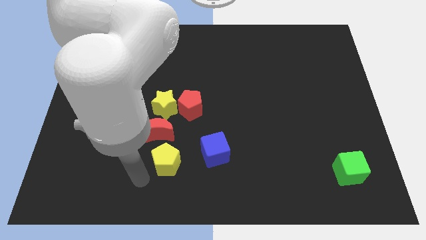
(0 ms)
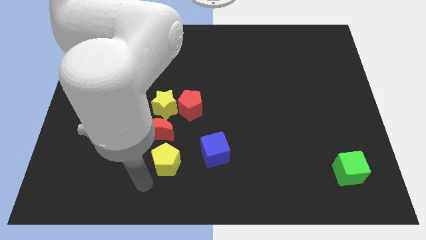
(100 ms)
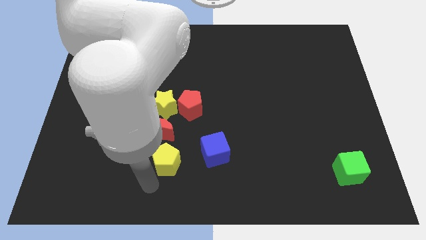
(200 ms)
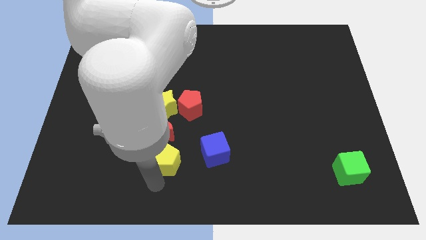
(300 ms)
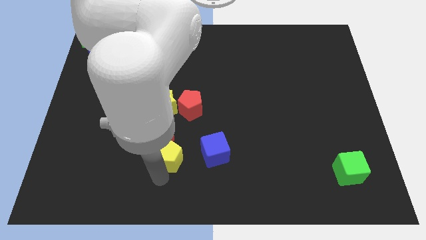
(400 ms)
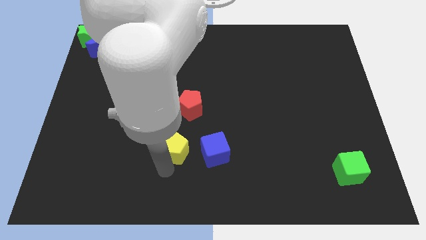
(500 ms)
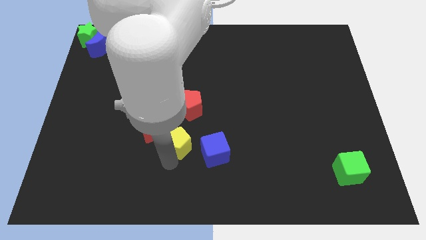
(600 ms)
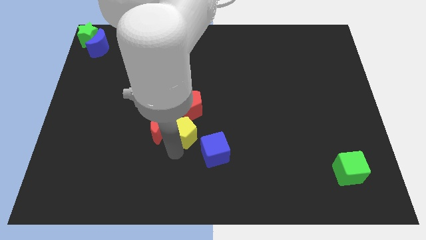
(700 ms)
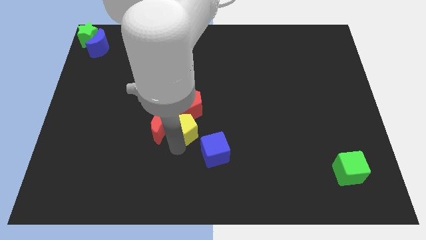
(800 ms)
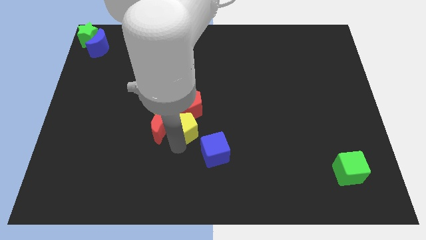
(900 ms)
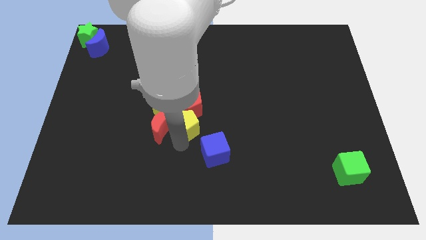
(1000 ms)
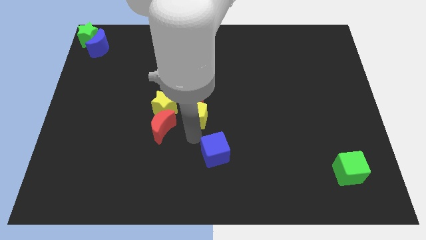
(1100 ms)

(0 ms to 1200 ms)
push the yellow pentagon to the bottom of the red pentagon

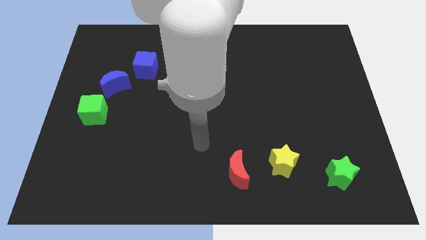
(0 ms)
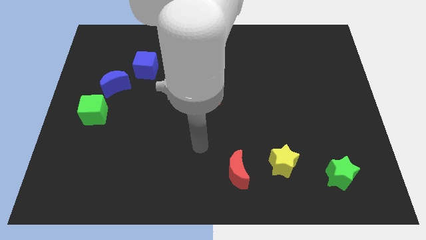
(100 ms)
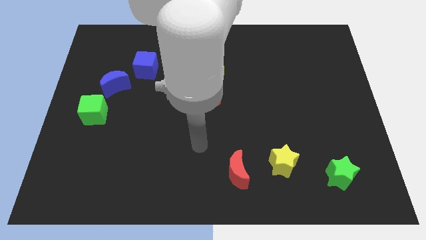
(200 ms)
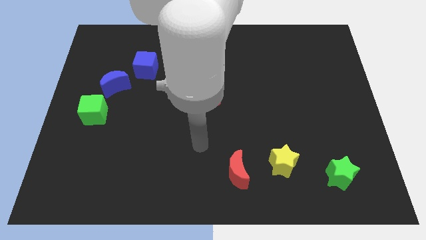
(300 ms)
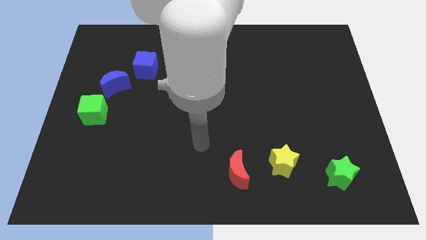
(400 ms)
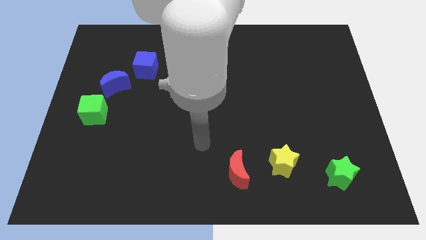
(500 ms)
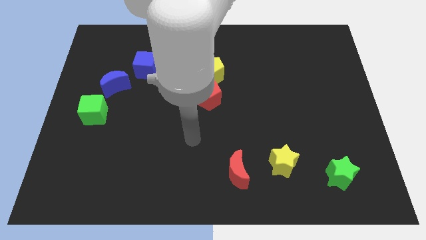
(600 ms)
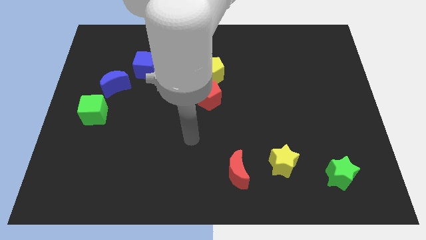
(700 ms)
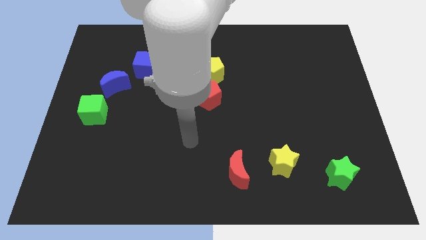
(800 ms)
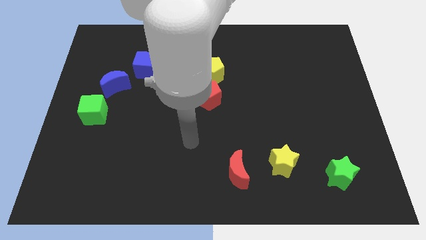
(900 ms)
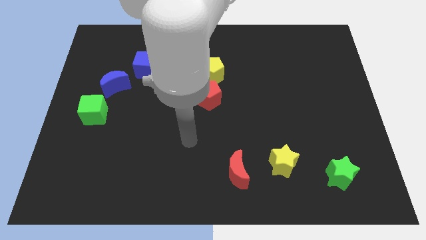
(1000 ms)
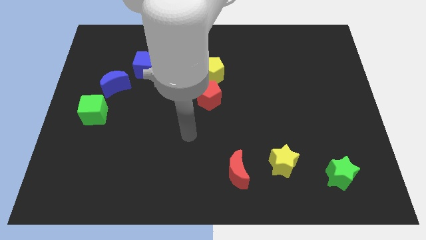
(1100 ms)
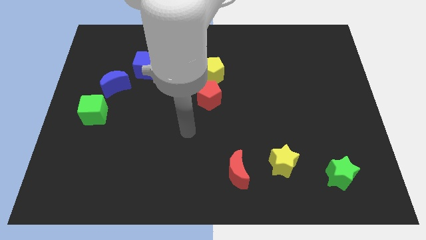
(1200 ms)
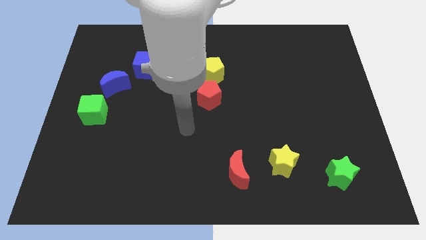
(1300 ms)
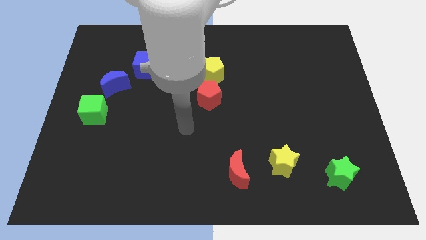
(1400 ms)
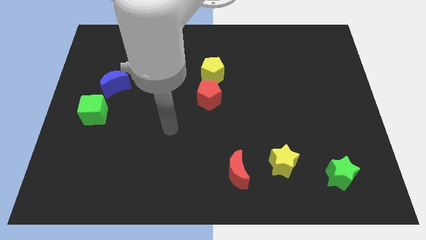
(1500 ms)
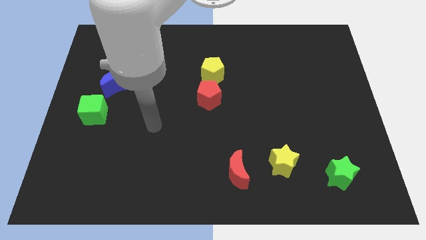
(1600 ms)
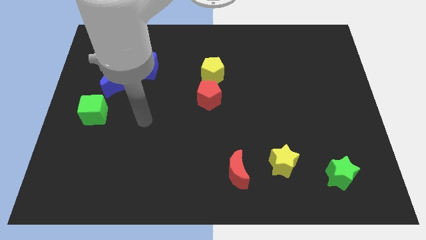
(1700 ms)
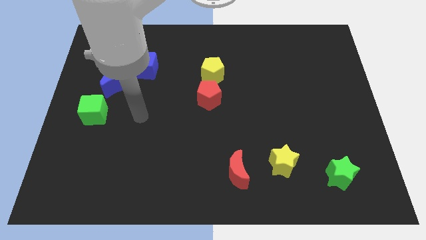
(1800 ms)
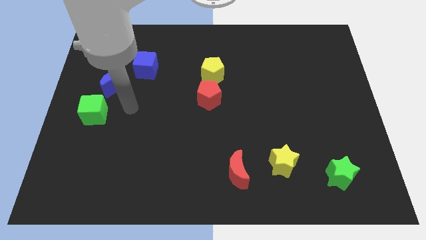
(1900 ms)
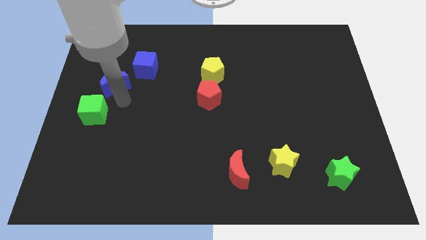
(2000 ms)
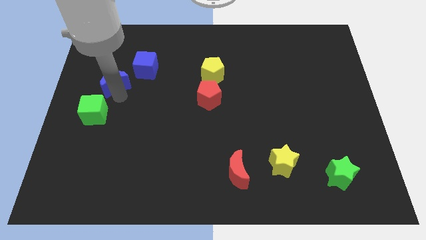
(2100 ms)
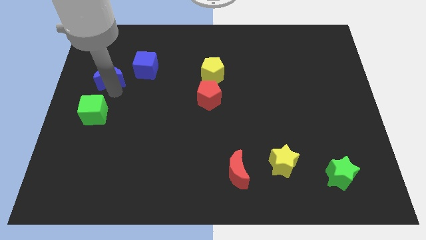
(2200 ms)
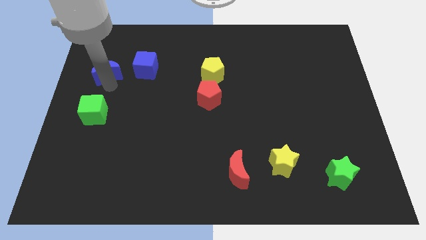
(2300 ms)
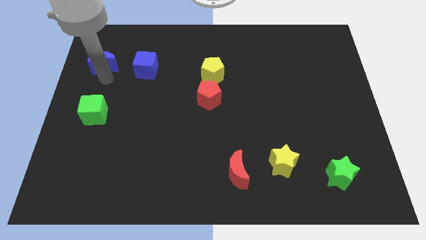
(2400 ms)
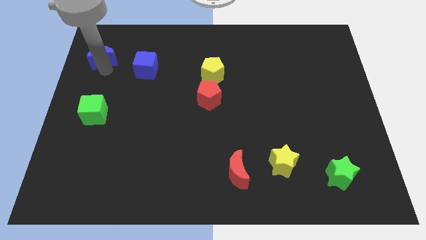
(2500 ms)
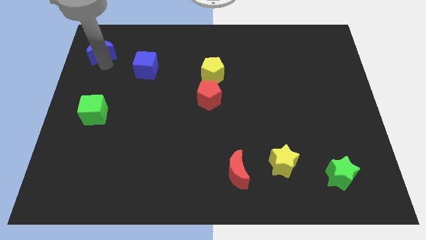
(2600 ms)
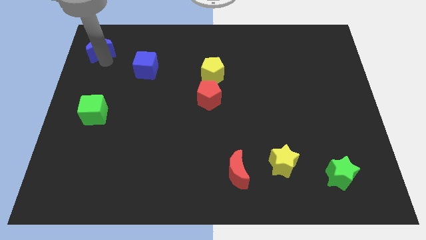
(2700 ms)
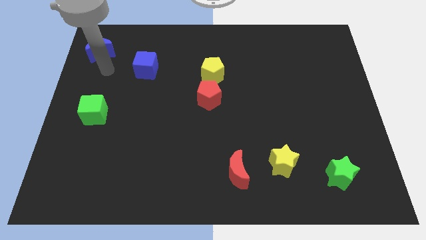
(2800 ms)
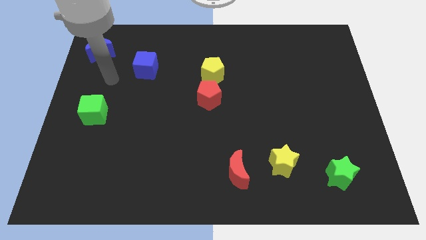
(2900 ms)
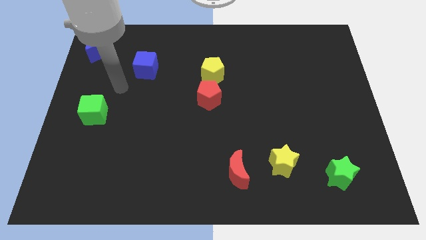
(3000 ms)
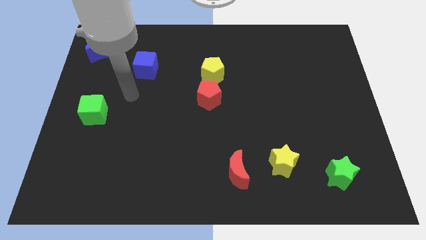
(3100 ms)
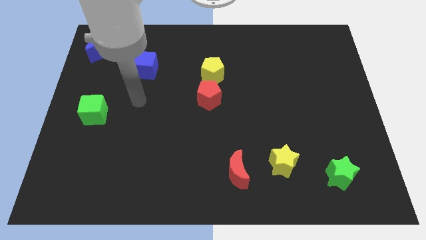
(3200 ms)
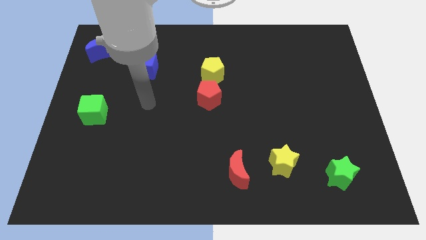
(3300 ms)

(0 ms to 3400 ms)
move the blue moon diagonally to blue cube

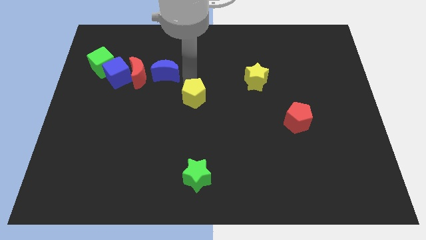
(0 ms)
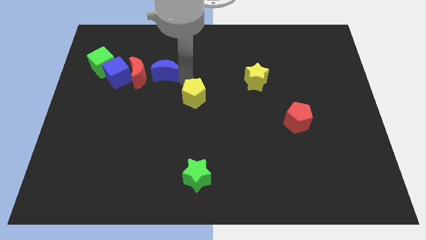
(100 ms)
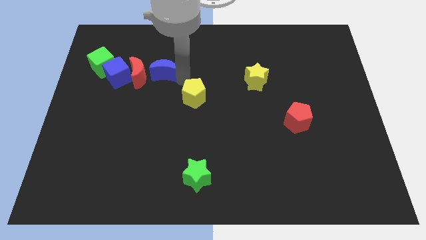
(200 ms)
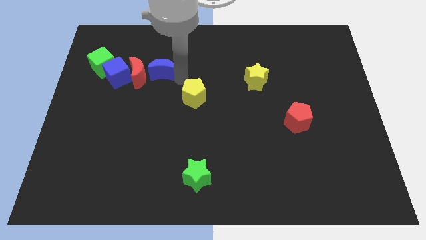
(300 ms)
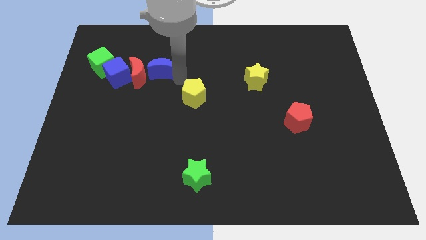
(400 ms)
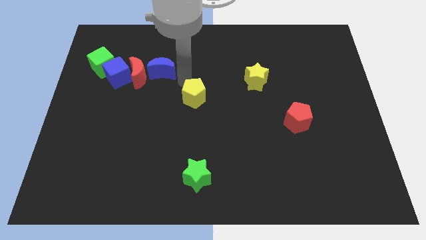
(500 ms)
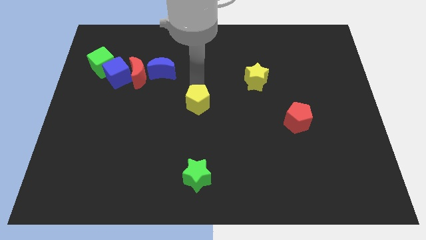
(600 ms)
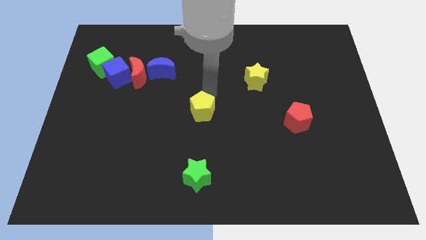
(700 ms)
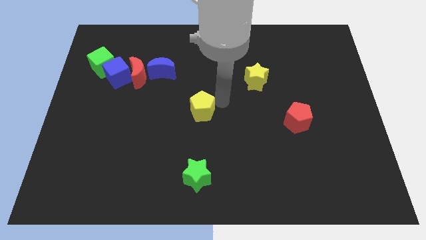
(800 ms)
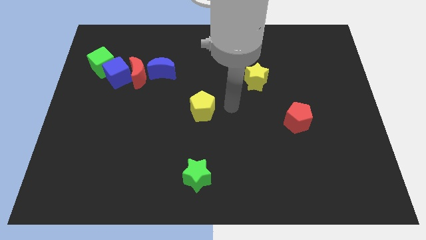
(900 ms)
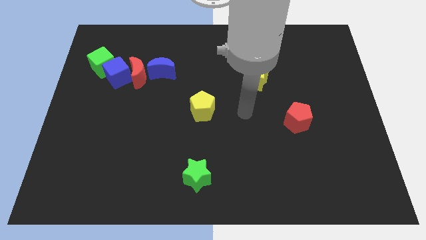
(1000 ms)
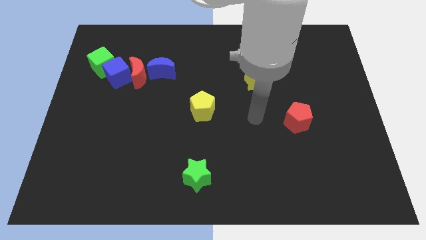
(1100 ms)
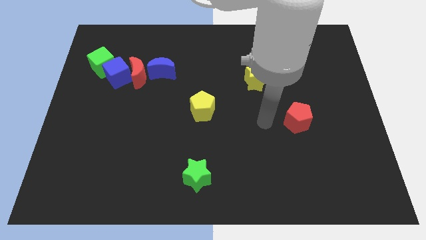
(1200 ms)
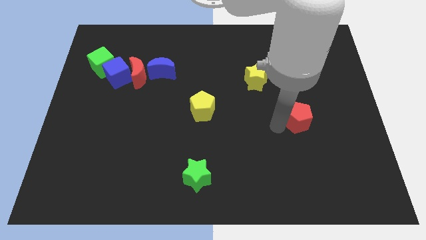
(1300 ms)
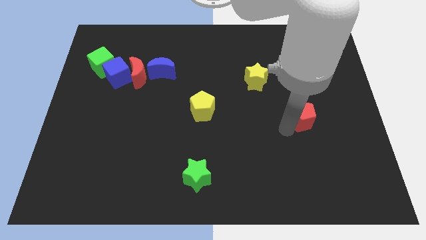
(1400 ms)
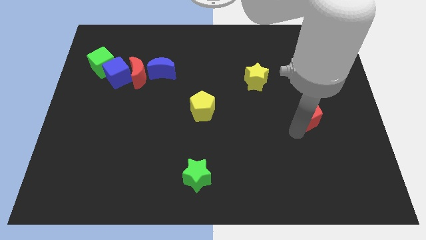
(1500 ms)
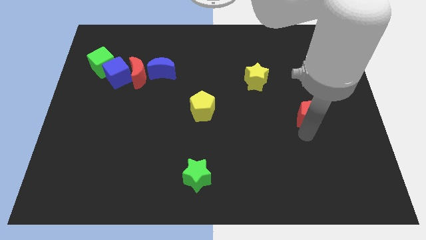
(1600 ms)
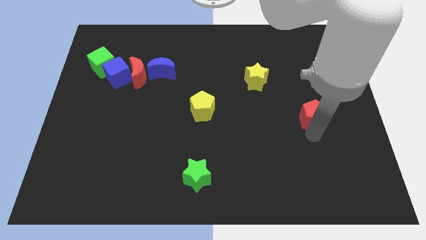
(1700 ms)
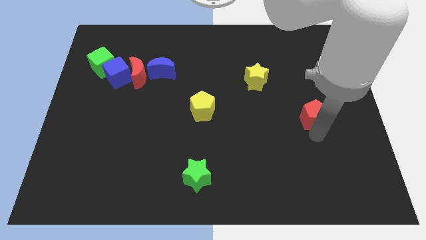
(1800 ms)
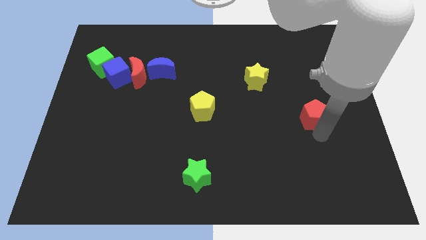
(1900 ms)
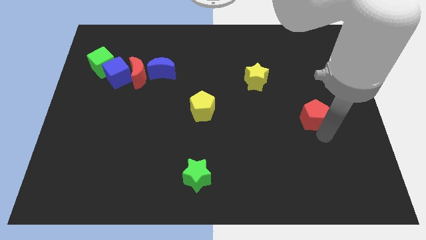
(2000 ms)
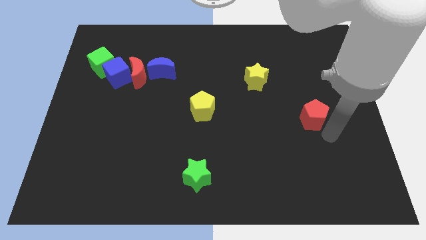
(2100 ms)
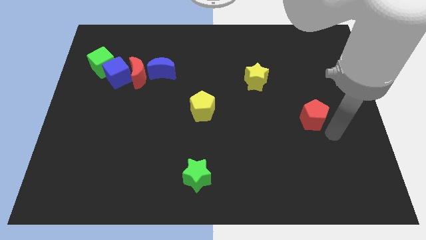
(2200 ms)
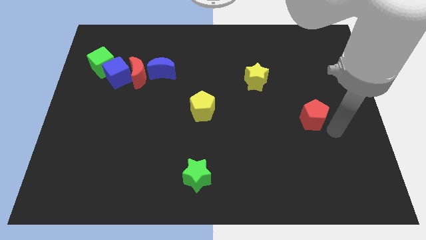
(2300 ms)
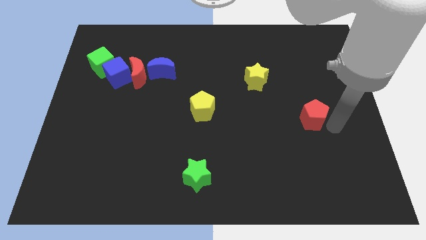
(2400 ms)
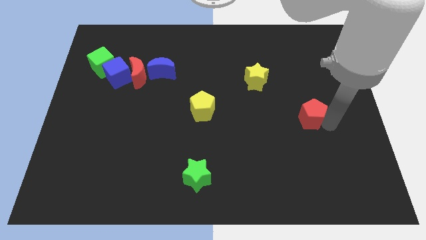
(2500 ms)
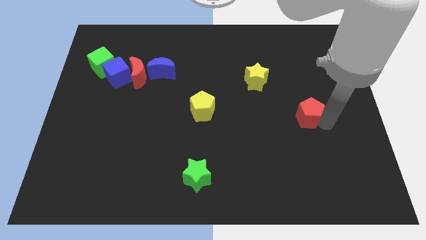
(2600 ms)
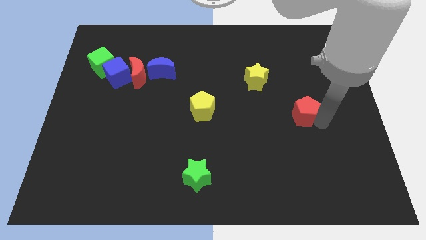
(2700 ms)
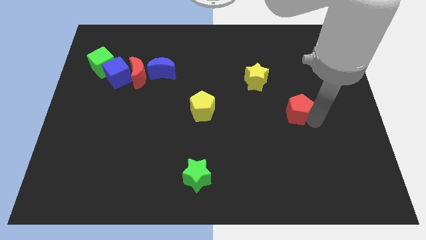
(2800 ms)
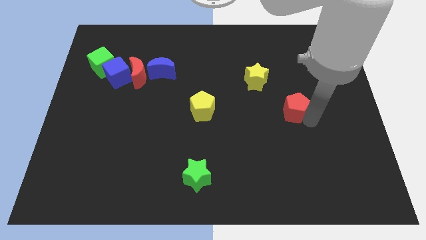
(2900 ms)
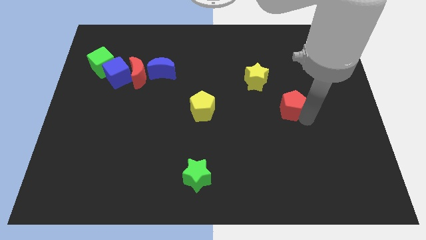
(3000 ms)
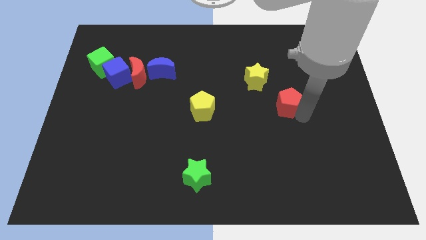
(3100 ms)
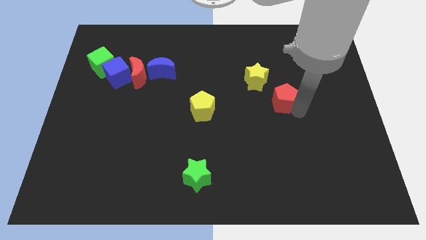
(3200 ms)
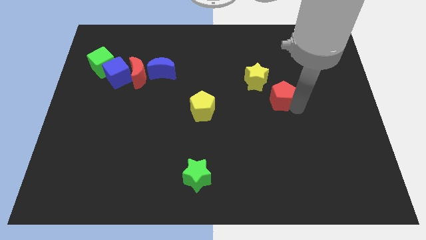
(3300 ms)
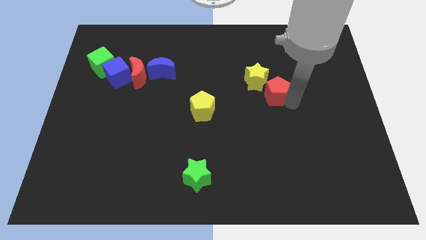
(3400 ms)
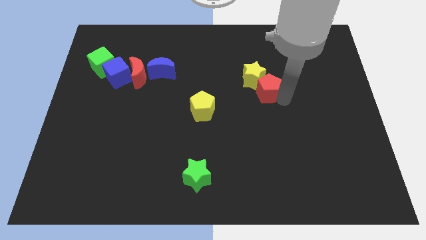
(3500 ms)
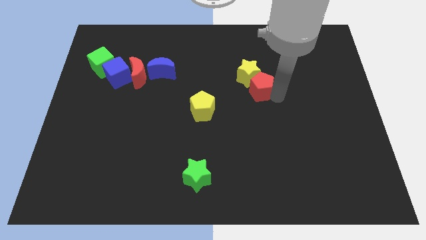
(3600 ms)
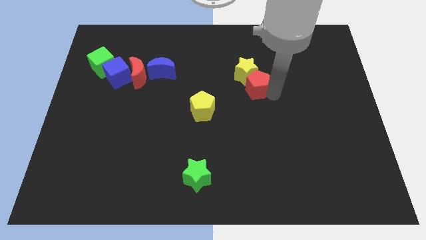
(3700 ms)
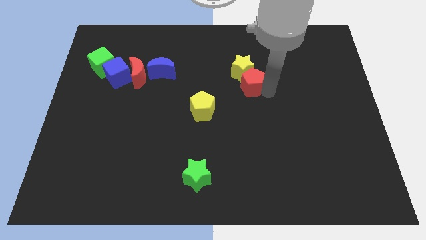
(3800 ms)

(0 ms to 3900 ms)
slide the yellow star and red pentagon to the top right side of the yellow pentagon

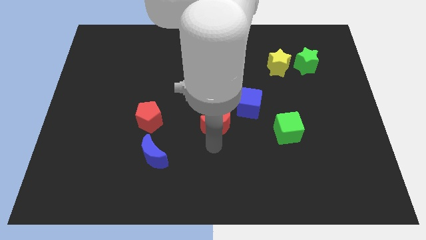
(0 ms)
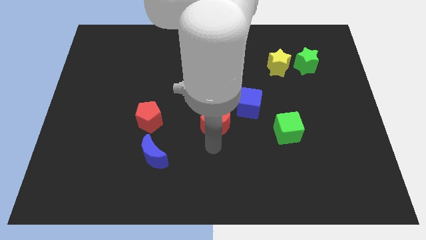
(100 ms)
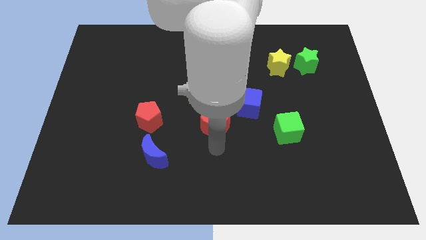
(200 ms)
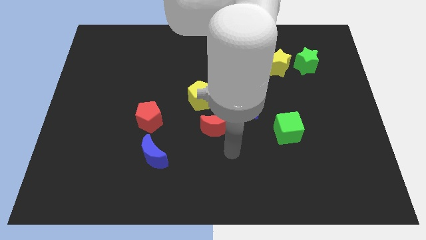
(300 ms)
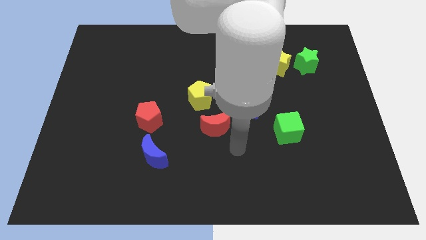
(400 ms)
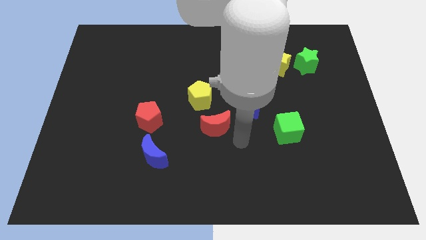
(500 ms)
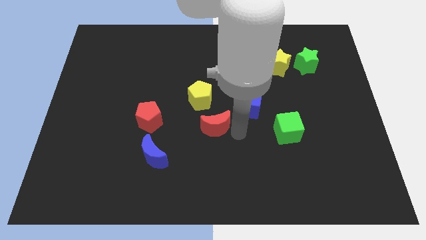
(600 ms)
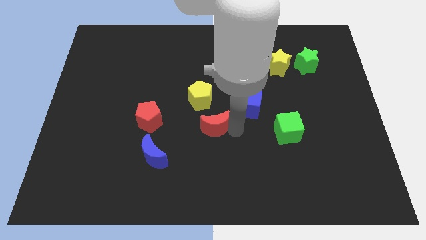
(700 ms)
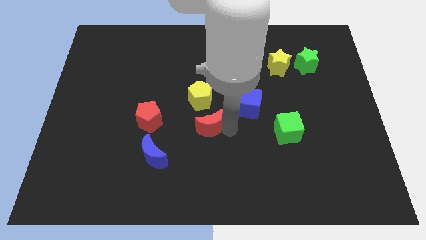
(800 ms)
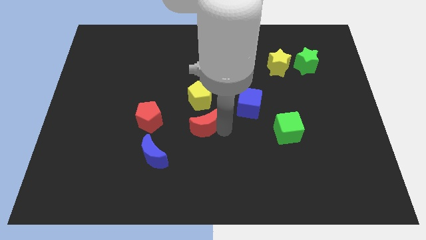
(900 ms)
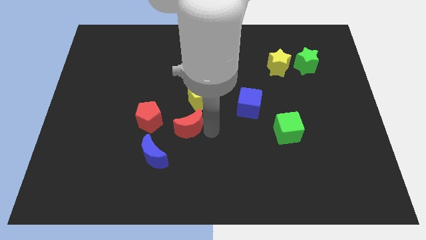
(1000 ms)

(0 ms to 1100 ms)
place red crescent below the yellow pentagon
